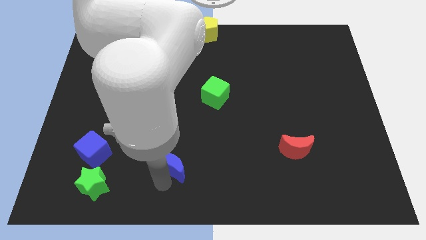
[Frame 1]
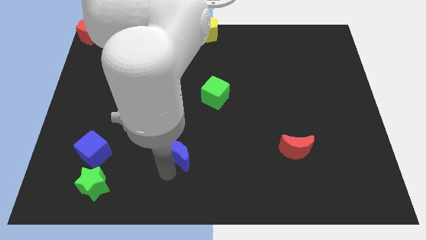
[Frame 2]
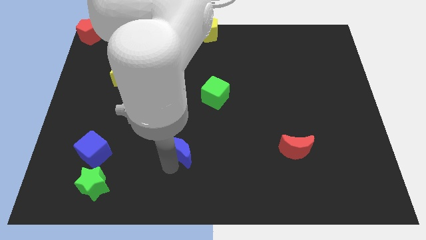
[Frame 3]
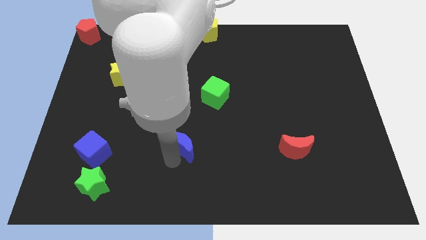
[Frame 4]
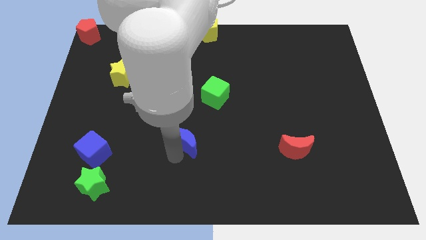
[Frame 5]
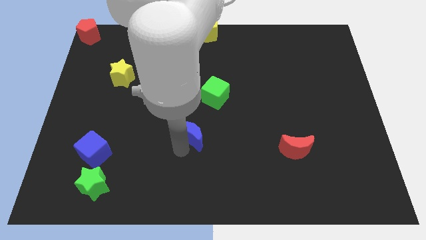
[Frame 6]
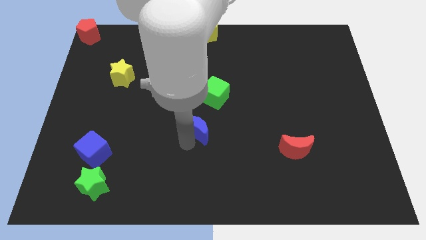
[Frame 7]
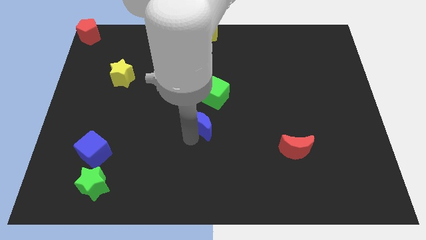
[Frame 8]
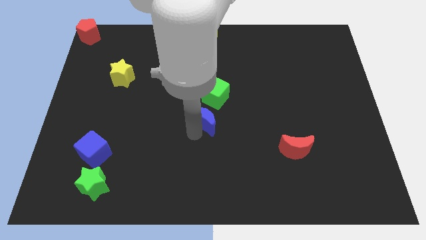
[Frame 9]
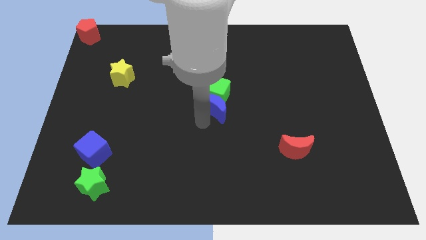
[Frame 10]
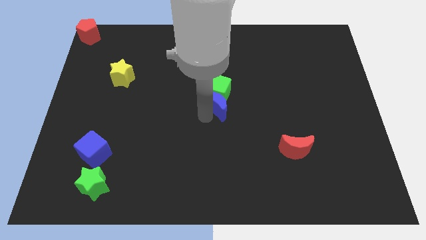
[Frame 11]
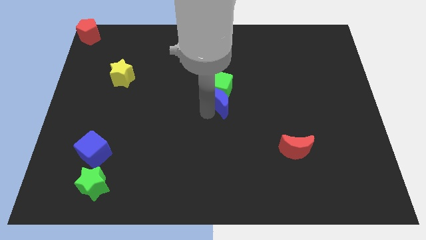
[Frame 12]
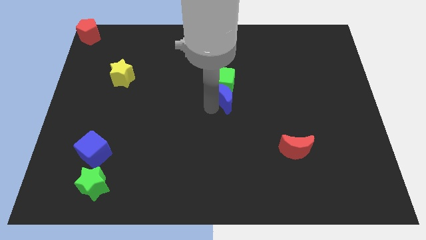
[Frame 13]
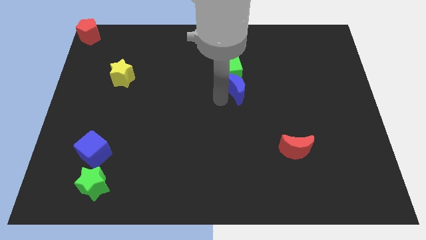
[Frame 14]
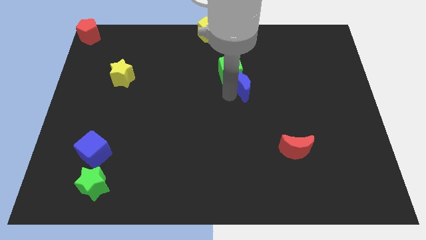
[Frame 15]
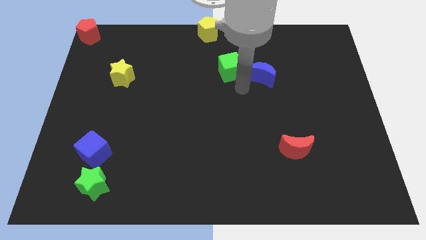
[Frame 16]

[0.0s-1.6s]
push the blue moon into the green cube

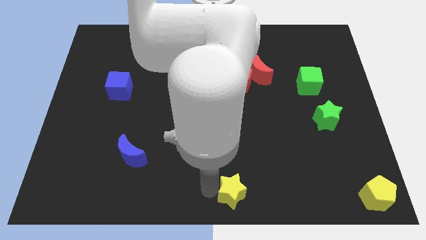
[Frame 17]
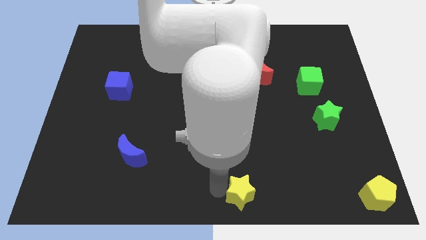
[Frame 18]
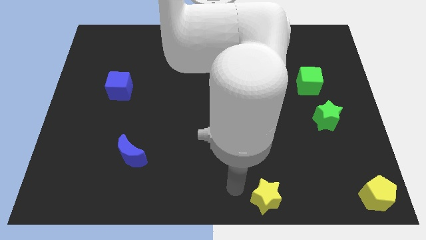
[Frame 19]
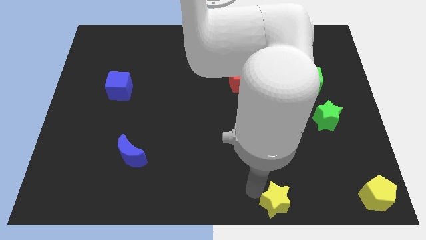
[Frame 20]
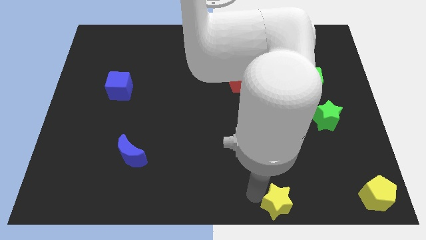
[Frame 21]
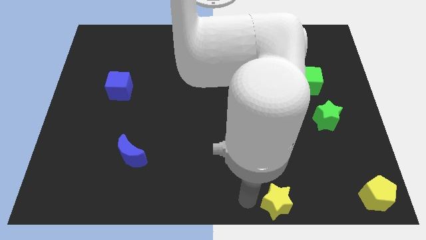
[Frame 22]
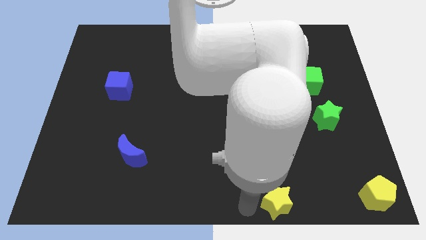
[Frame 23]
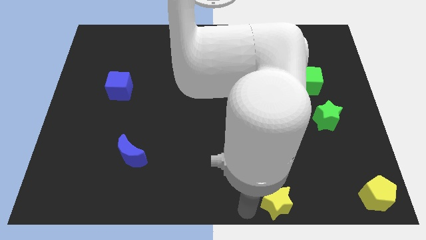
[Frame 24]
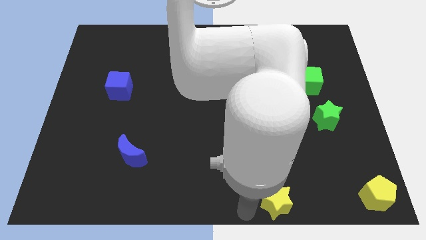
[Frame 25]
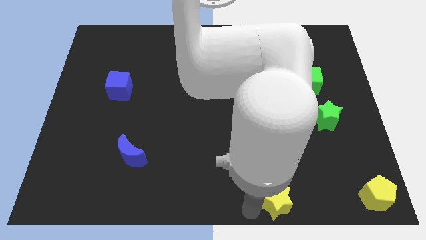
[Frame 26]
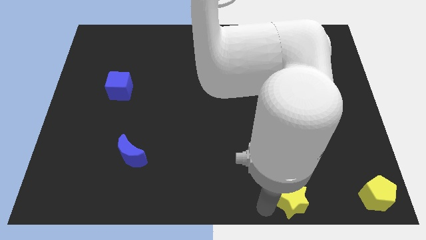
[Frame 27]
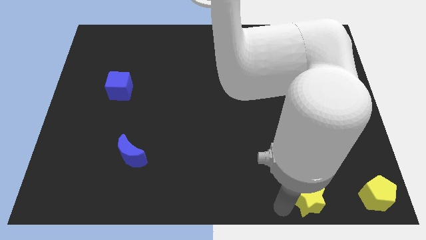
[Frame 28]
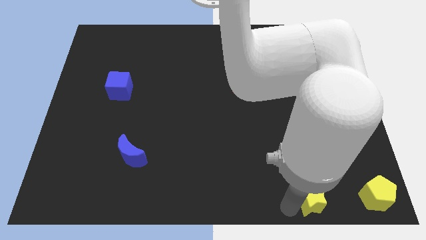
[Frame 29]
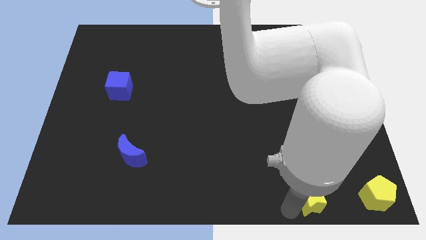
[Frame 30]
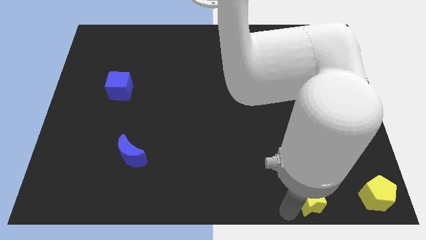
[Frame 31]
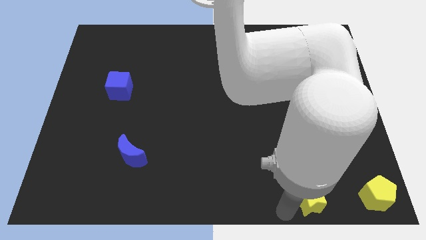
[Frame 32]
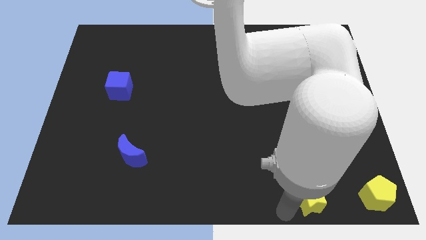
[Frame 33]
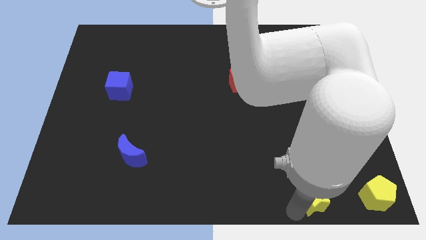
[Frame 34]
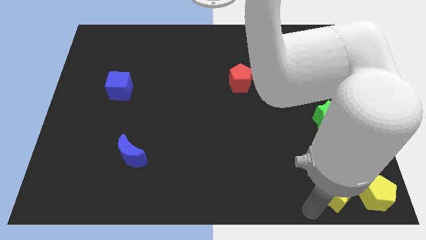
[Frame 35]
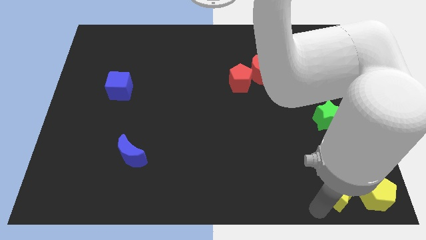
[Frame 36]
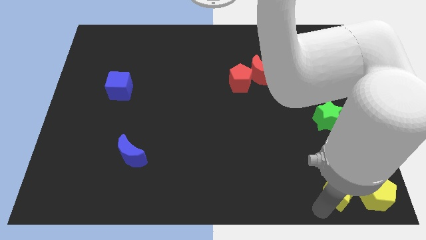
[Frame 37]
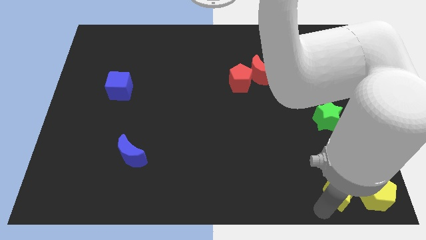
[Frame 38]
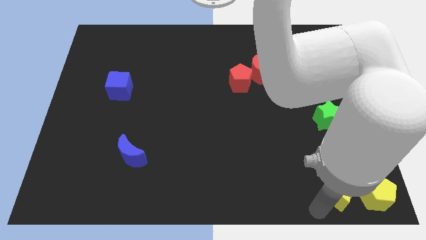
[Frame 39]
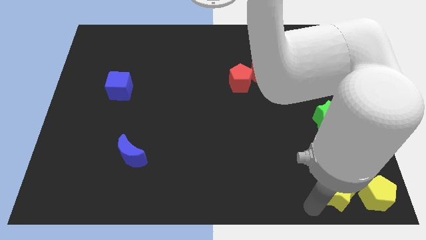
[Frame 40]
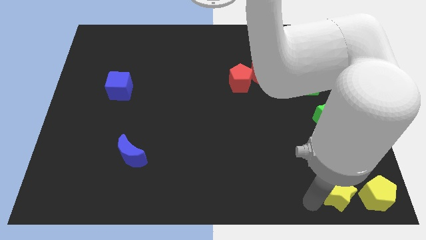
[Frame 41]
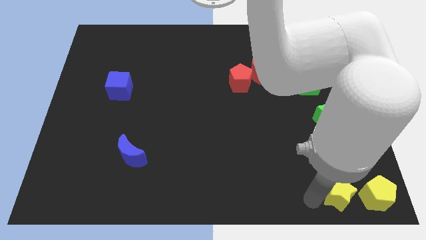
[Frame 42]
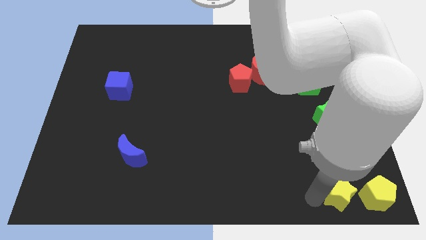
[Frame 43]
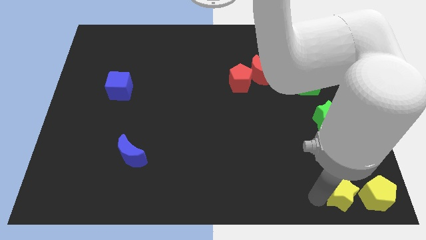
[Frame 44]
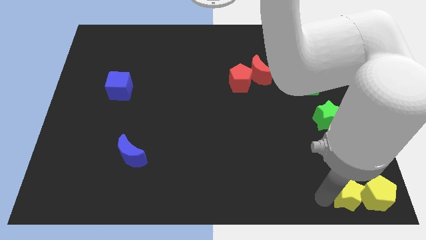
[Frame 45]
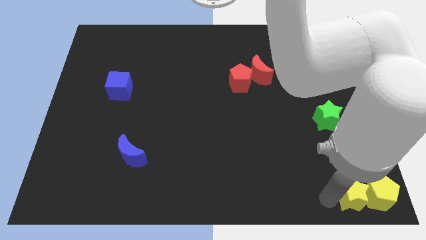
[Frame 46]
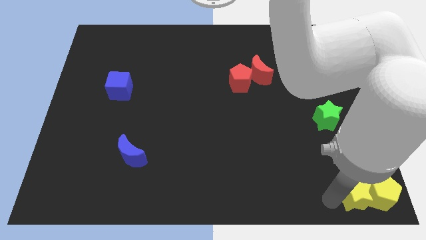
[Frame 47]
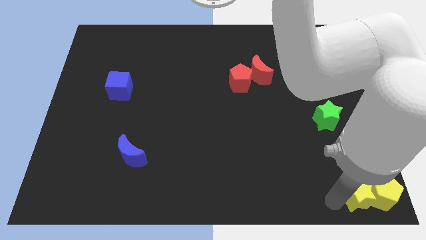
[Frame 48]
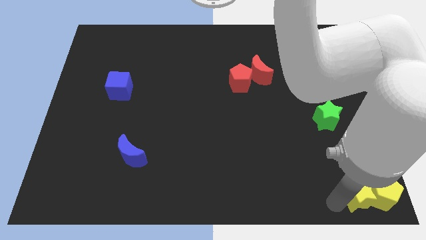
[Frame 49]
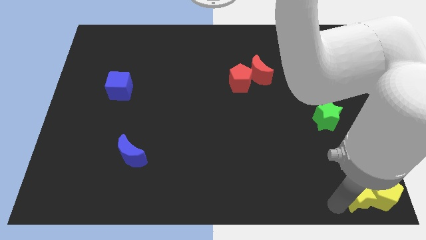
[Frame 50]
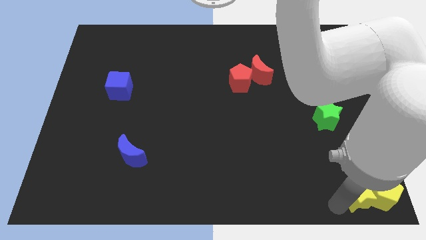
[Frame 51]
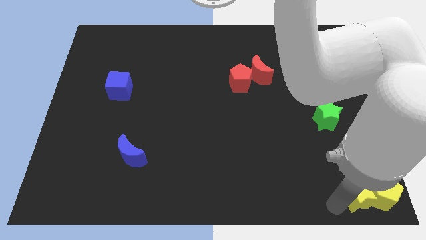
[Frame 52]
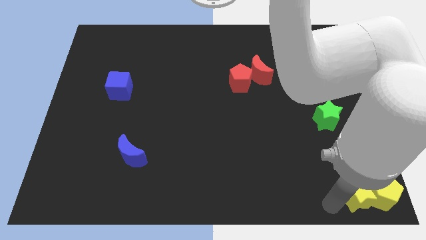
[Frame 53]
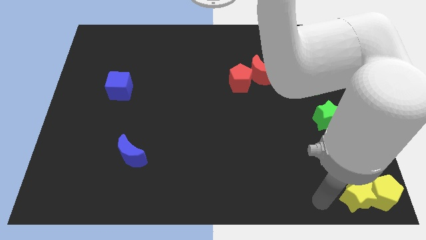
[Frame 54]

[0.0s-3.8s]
move the yellow star into the yellow pentagon

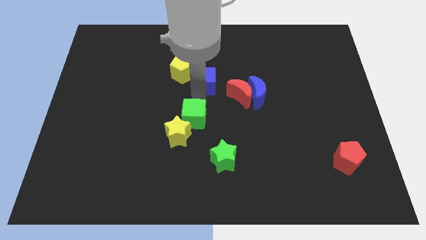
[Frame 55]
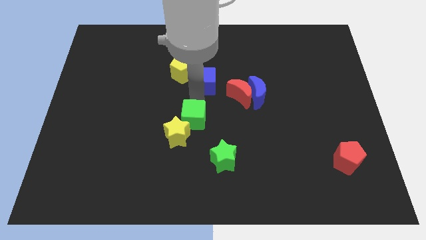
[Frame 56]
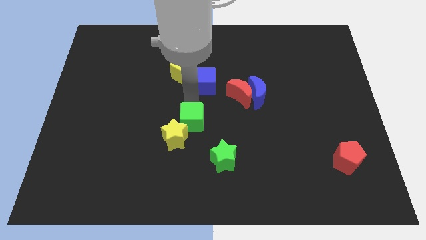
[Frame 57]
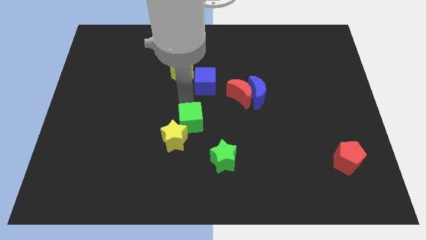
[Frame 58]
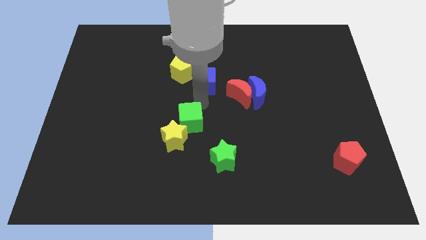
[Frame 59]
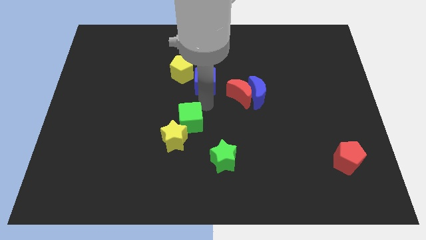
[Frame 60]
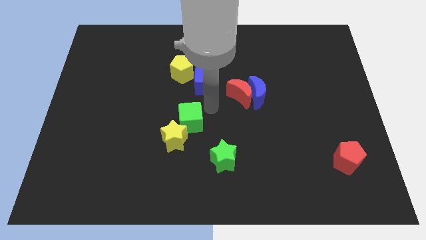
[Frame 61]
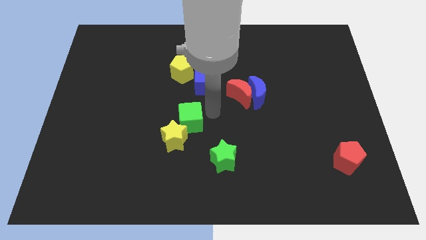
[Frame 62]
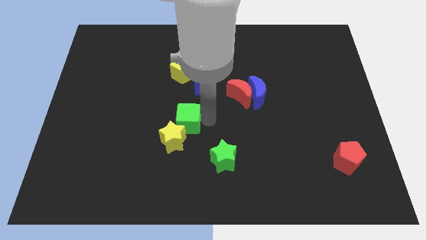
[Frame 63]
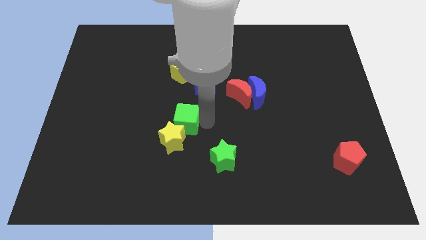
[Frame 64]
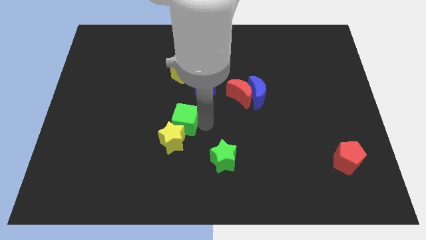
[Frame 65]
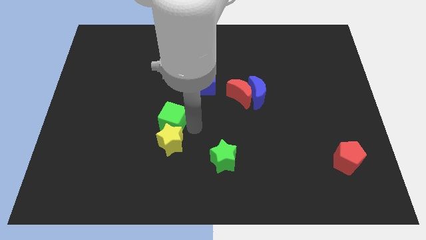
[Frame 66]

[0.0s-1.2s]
move the green cube above the yellow star

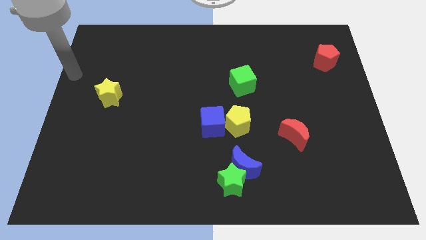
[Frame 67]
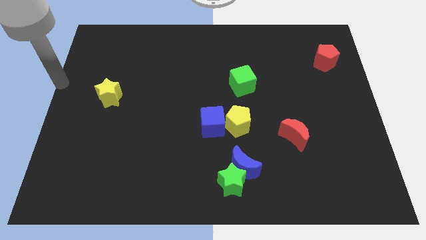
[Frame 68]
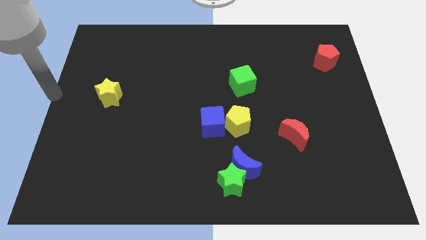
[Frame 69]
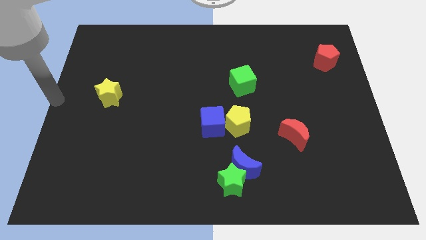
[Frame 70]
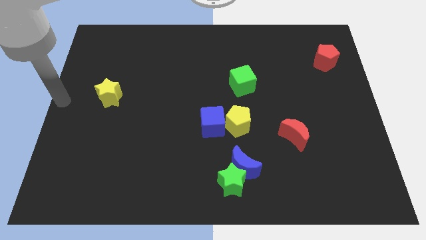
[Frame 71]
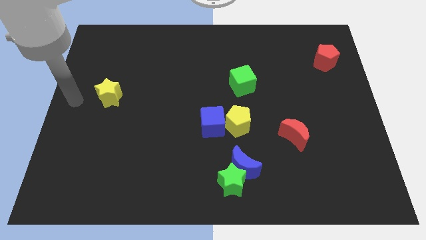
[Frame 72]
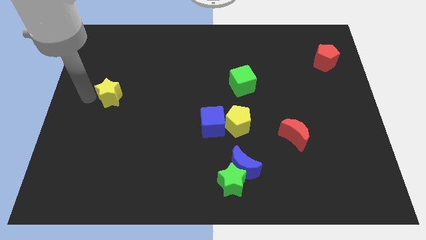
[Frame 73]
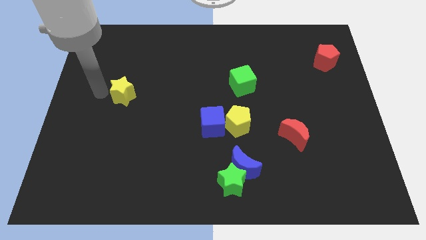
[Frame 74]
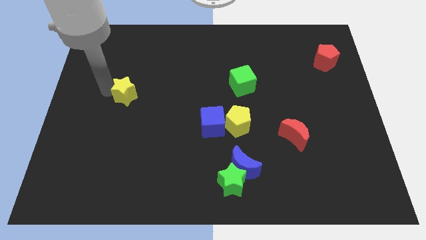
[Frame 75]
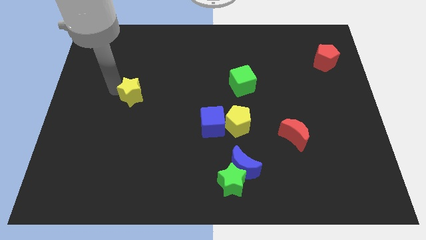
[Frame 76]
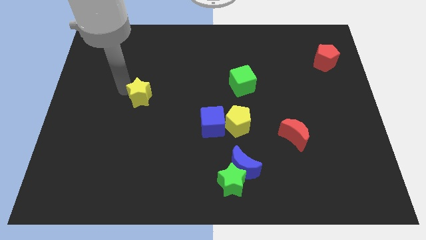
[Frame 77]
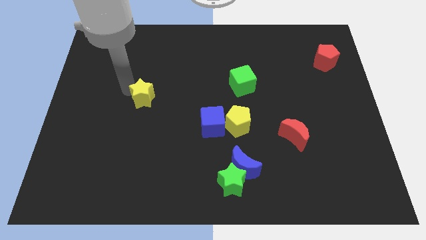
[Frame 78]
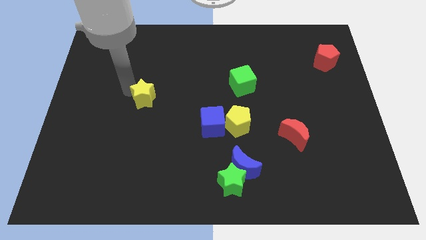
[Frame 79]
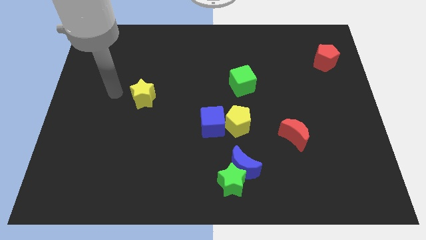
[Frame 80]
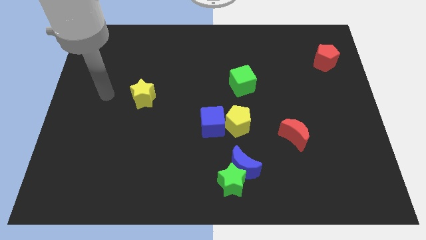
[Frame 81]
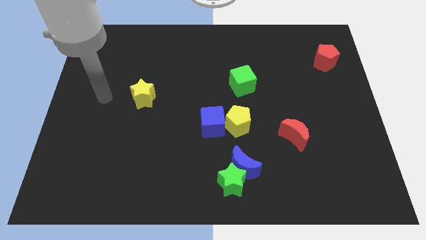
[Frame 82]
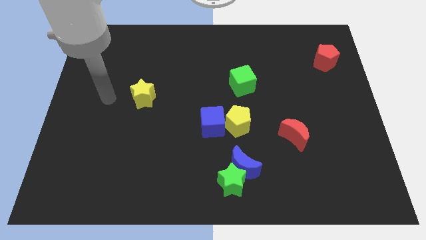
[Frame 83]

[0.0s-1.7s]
drag the yellow star slightly to the right

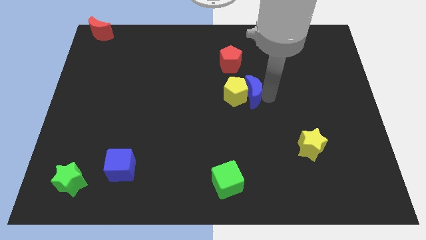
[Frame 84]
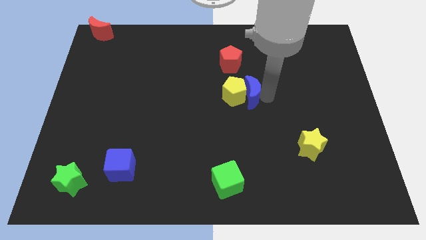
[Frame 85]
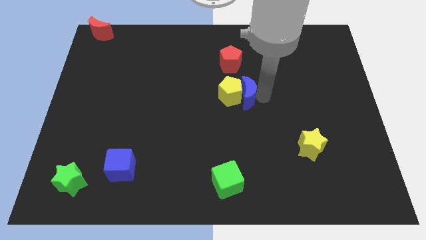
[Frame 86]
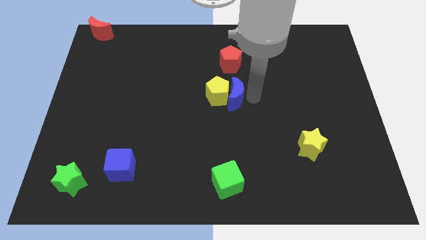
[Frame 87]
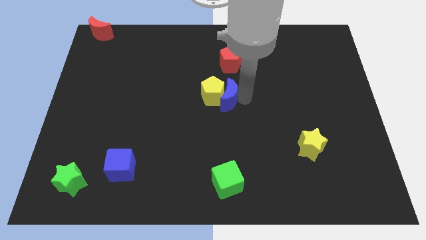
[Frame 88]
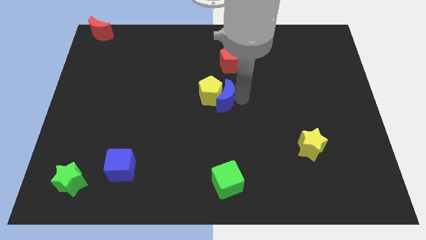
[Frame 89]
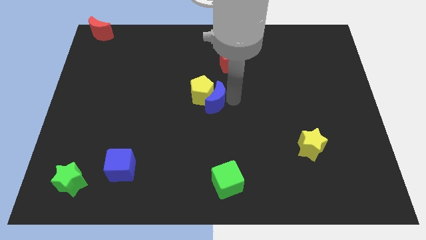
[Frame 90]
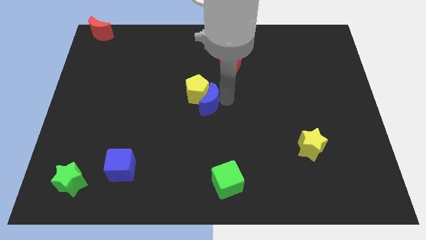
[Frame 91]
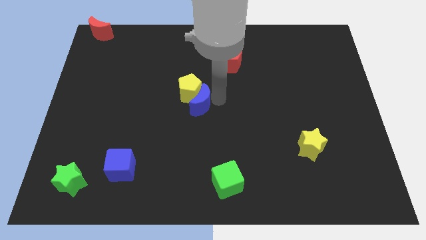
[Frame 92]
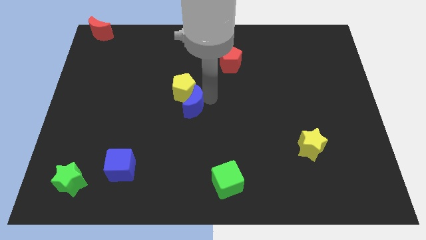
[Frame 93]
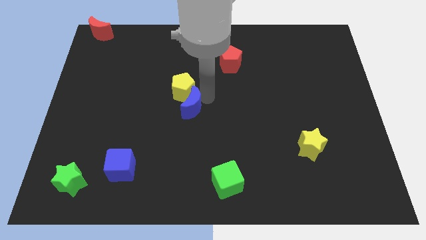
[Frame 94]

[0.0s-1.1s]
drag the blue moon to the left
